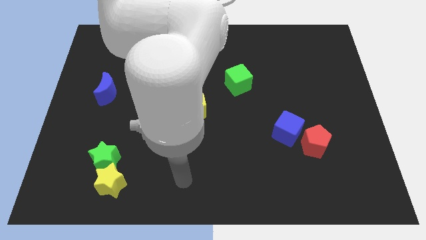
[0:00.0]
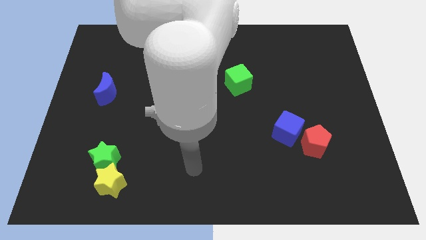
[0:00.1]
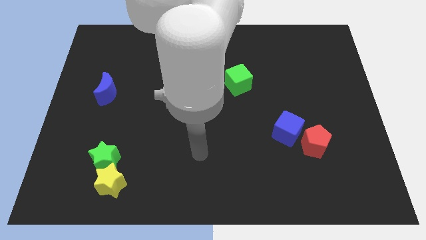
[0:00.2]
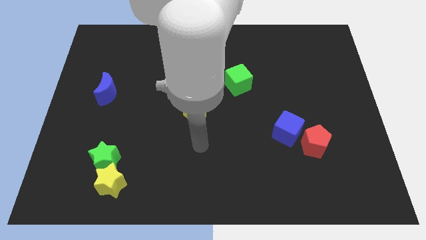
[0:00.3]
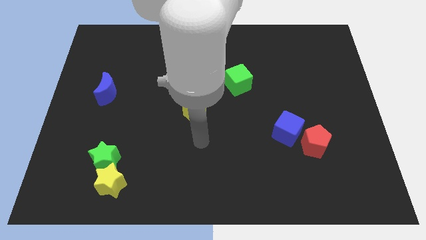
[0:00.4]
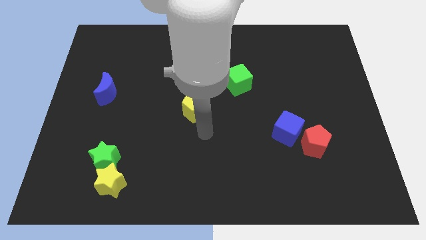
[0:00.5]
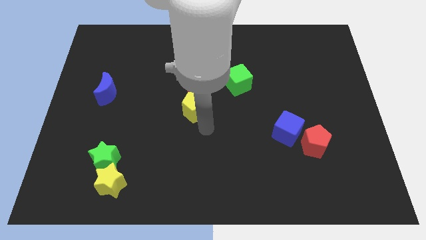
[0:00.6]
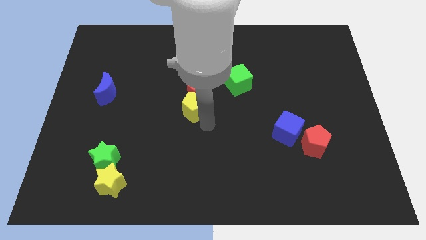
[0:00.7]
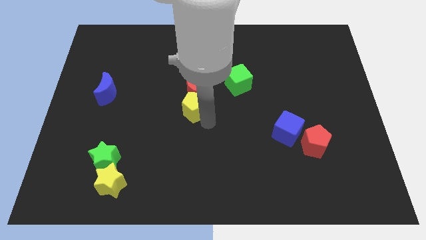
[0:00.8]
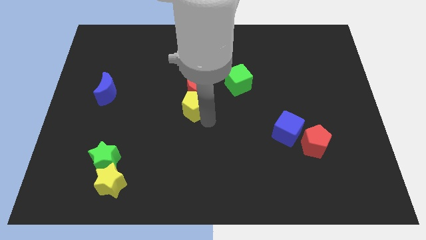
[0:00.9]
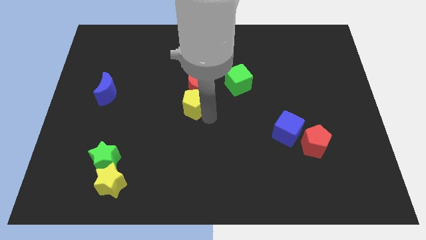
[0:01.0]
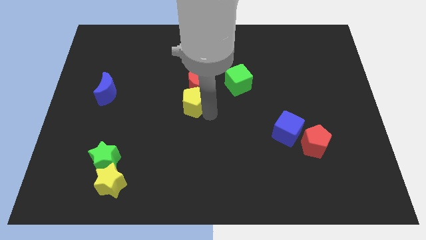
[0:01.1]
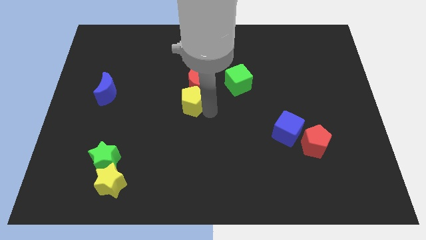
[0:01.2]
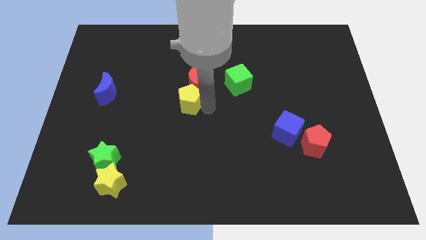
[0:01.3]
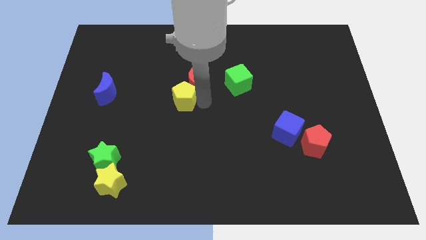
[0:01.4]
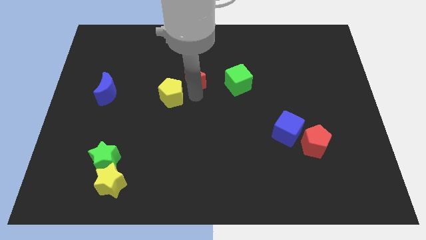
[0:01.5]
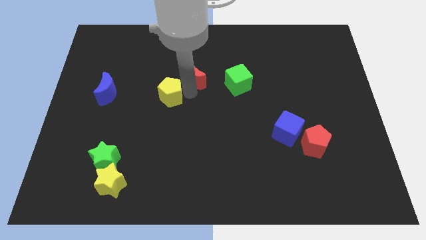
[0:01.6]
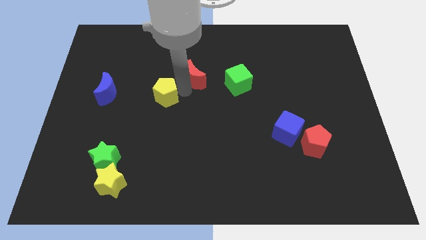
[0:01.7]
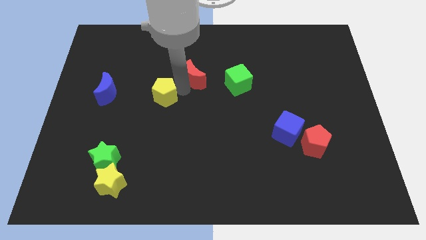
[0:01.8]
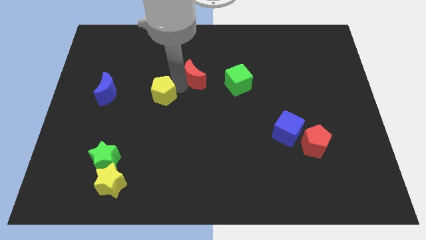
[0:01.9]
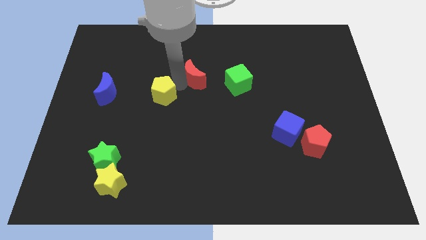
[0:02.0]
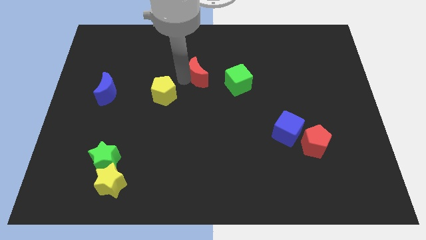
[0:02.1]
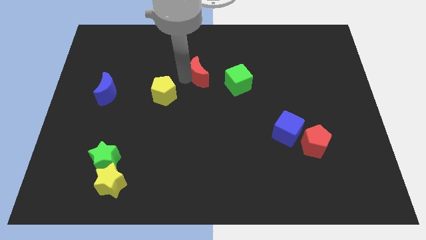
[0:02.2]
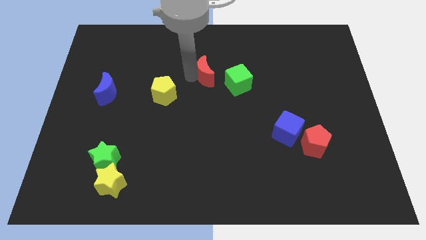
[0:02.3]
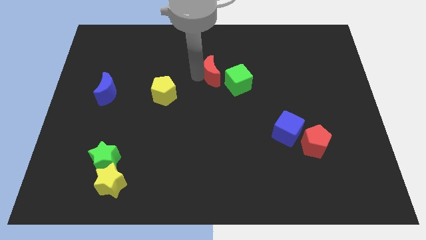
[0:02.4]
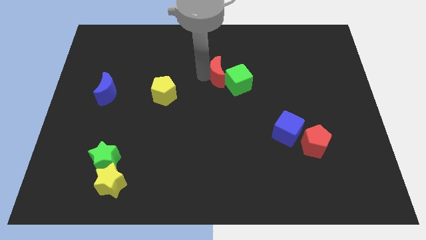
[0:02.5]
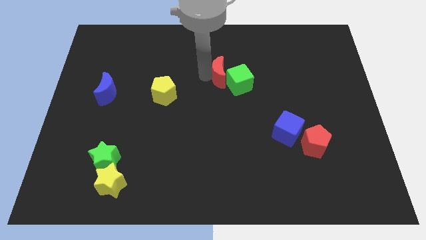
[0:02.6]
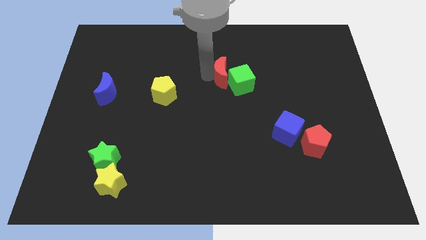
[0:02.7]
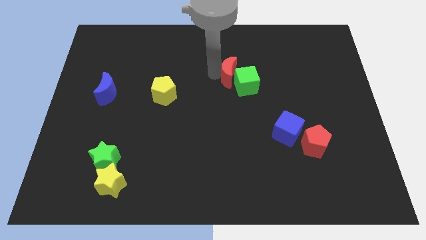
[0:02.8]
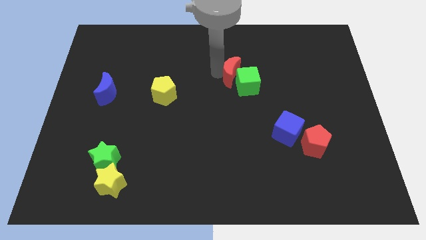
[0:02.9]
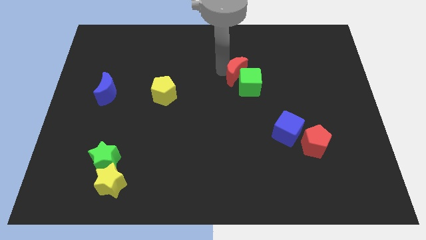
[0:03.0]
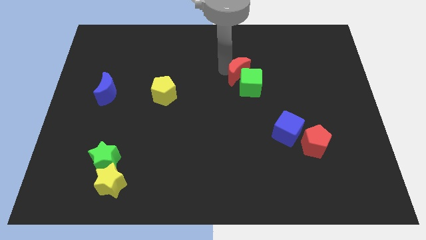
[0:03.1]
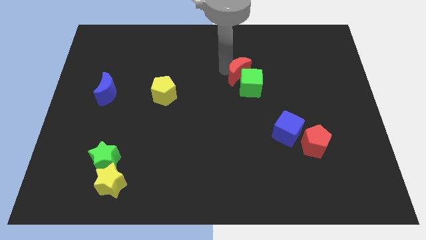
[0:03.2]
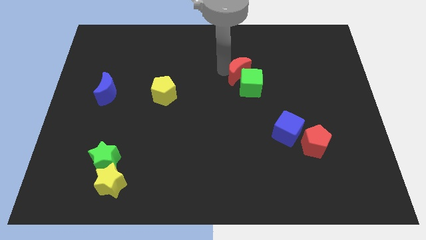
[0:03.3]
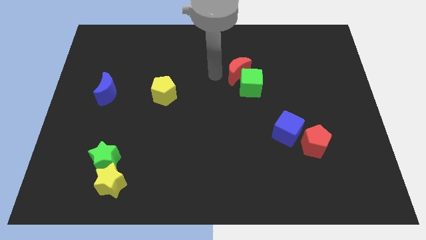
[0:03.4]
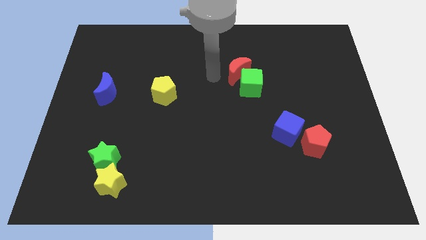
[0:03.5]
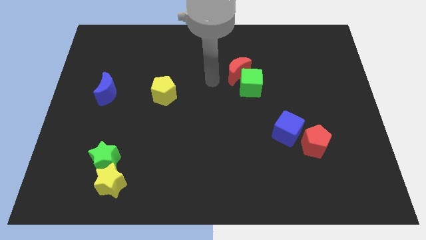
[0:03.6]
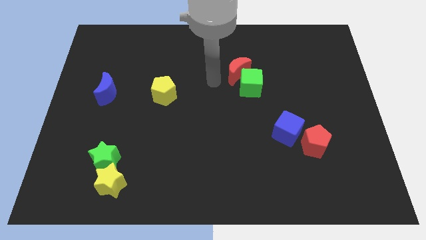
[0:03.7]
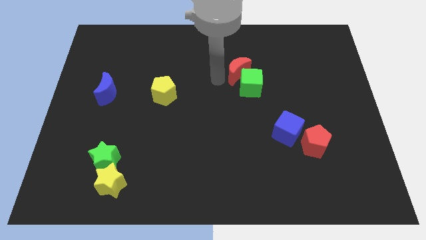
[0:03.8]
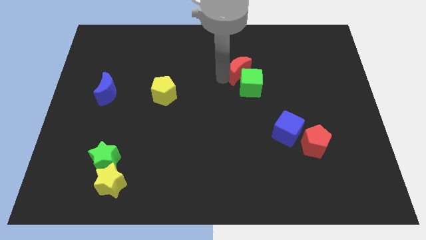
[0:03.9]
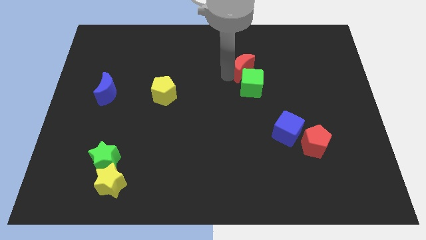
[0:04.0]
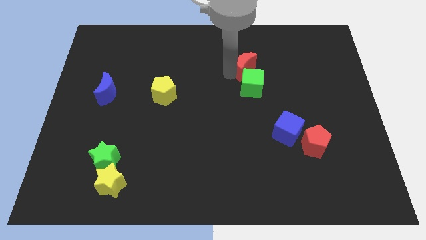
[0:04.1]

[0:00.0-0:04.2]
separate the red crescent and the yellow pentagon

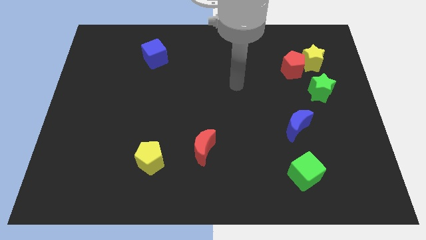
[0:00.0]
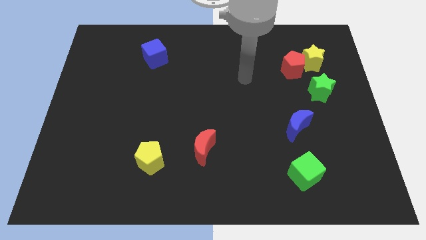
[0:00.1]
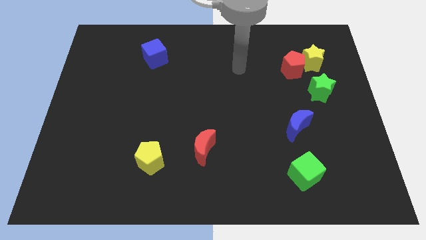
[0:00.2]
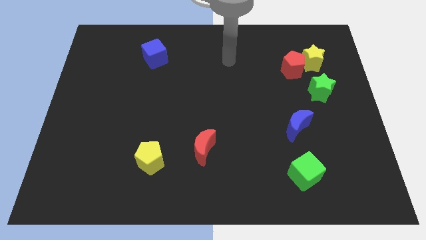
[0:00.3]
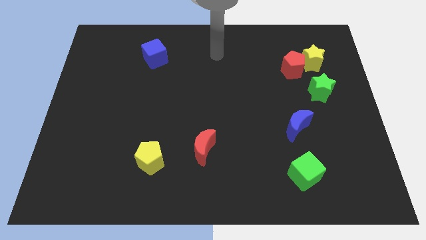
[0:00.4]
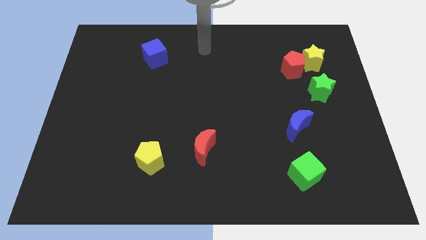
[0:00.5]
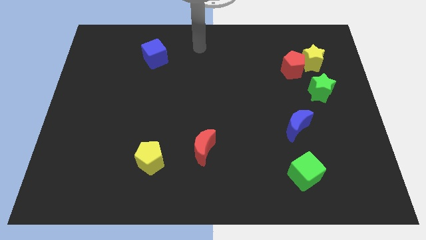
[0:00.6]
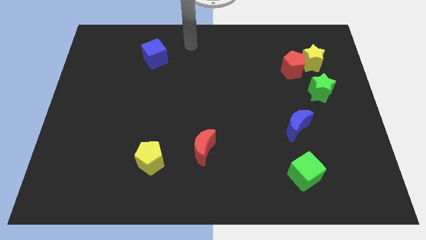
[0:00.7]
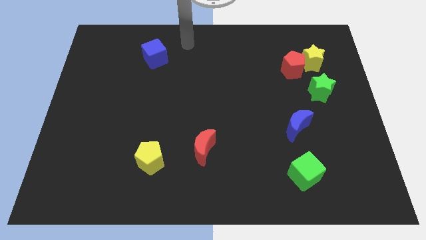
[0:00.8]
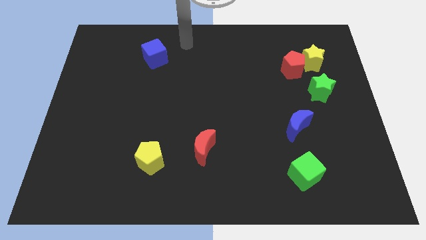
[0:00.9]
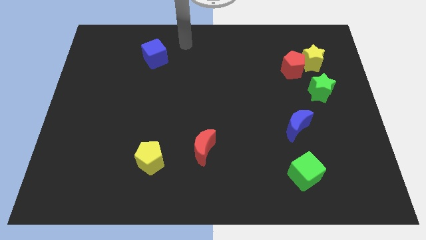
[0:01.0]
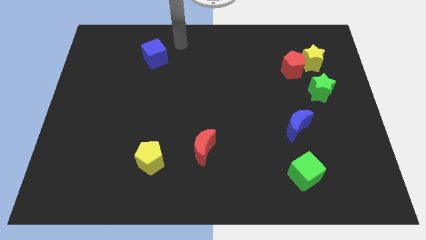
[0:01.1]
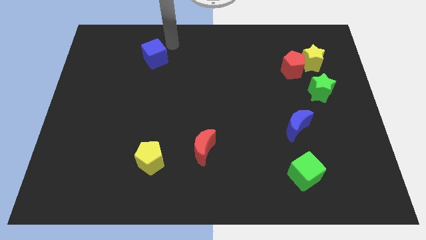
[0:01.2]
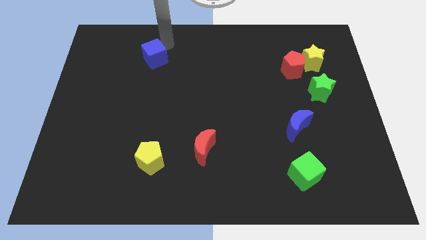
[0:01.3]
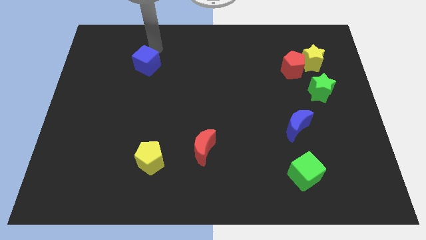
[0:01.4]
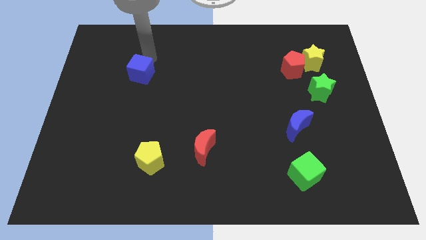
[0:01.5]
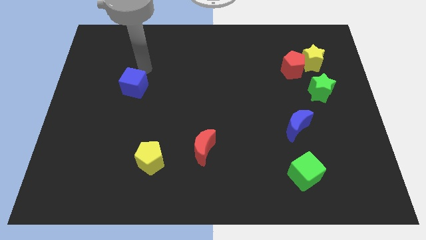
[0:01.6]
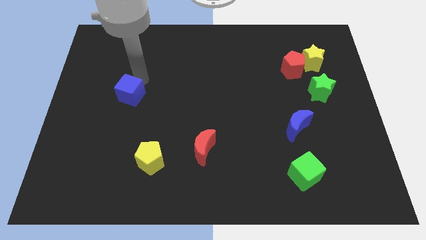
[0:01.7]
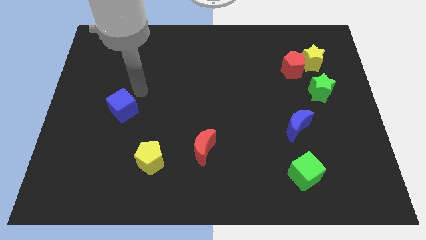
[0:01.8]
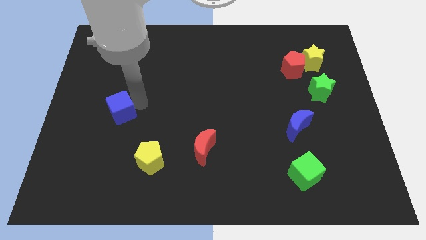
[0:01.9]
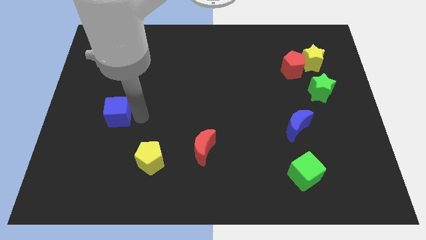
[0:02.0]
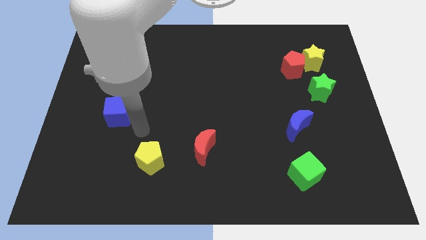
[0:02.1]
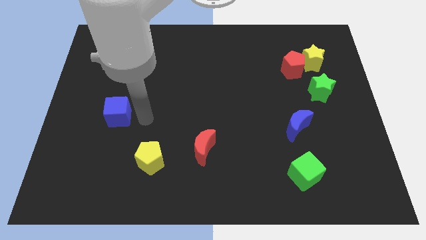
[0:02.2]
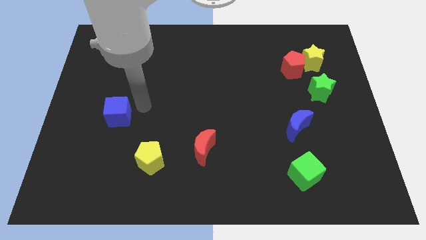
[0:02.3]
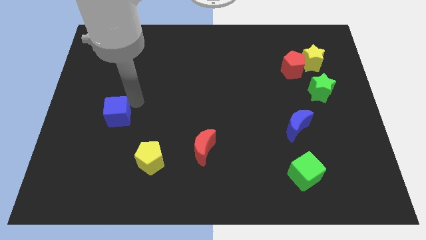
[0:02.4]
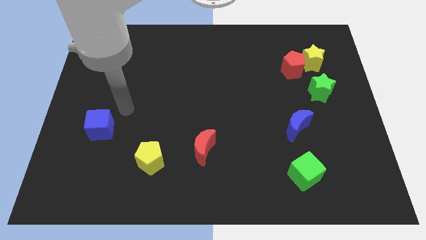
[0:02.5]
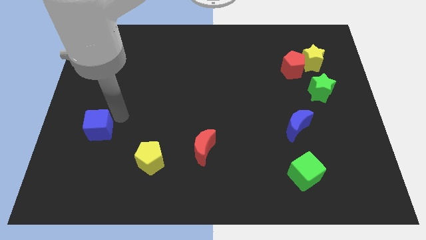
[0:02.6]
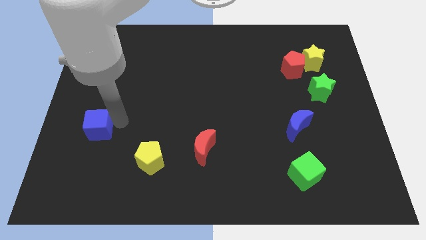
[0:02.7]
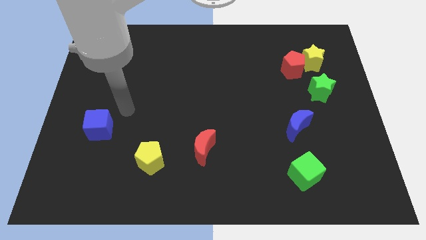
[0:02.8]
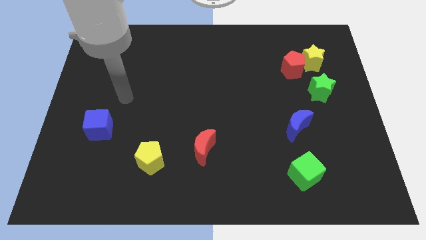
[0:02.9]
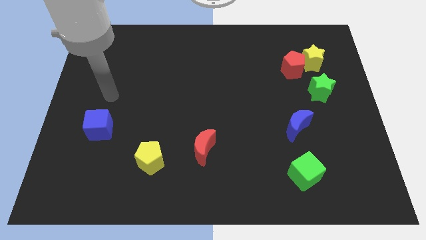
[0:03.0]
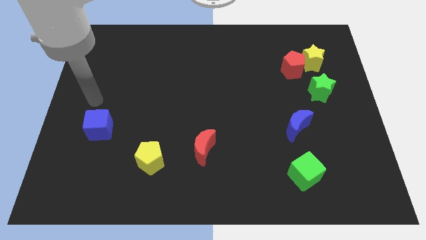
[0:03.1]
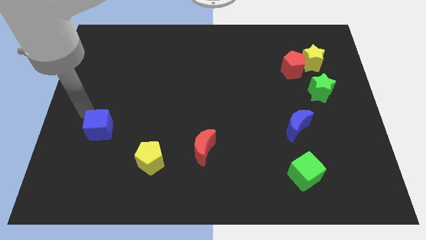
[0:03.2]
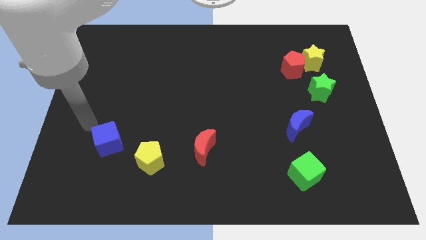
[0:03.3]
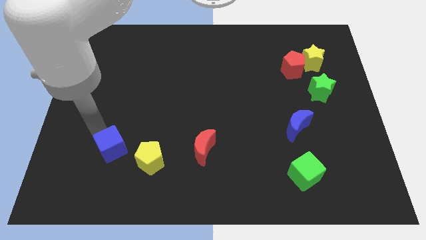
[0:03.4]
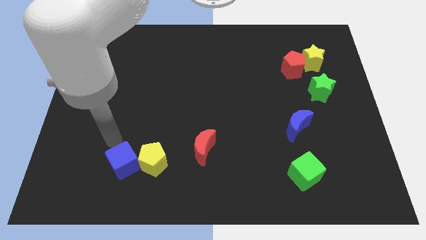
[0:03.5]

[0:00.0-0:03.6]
push the blue cube into the left side of the yellow pentagon

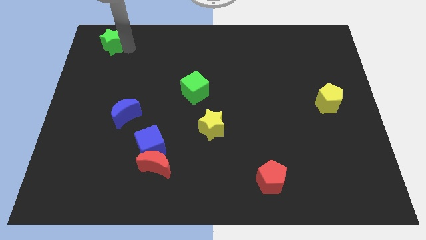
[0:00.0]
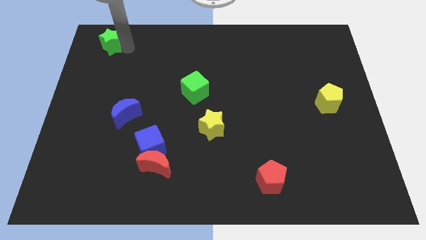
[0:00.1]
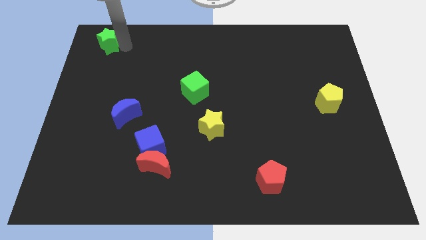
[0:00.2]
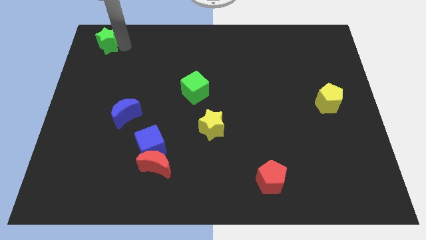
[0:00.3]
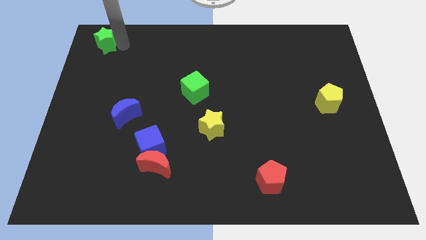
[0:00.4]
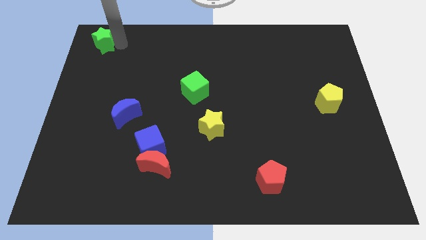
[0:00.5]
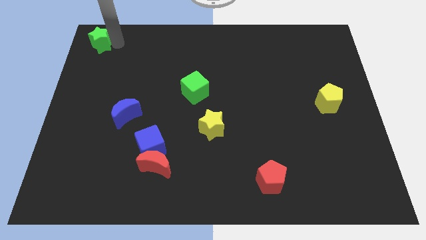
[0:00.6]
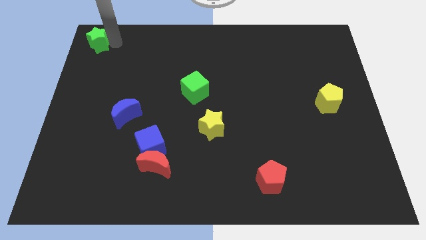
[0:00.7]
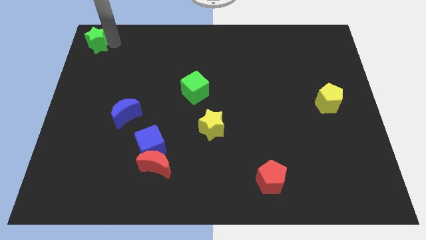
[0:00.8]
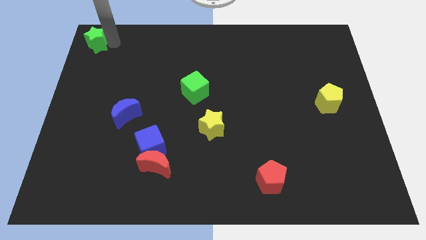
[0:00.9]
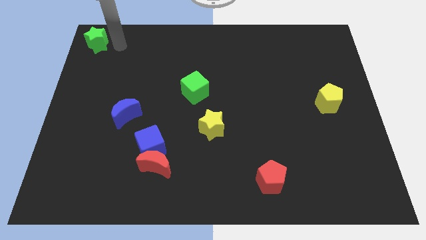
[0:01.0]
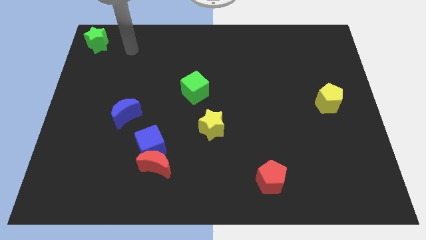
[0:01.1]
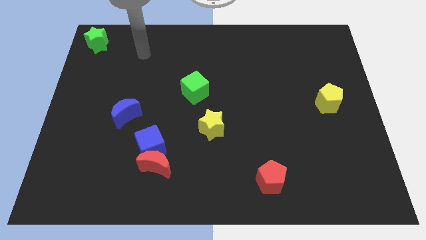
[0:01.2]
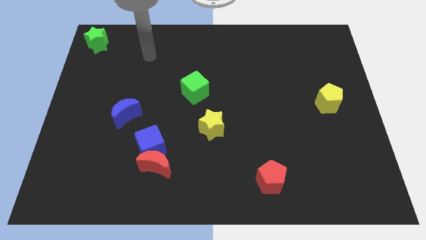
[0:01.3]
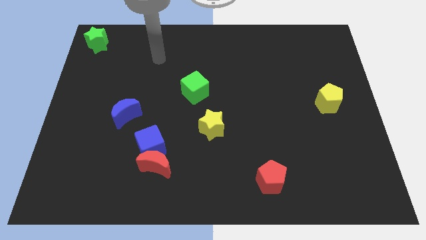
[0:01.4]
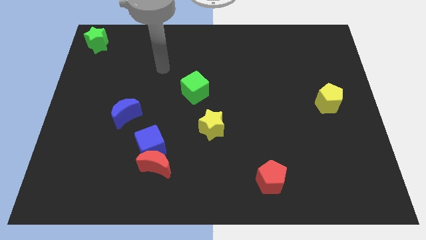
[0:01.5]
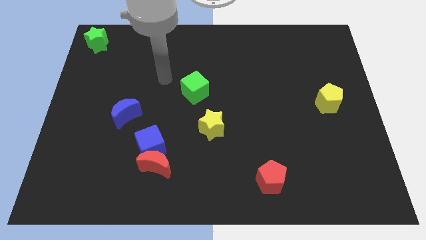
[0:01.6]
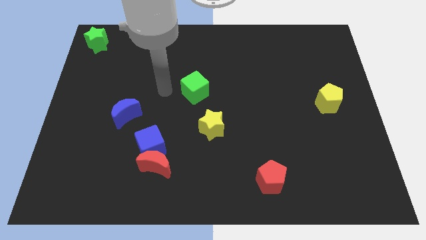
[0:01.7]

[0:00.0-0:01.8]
move the green star to the top left
